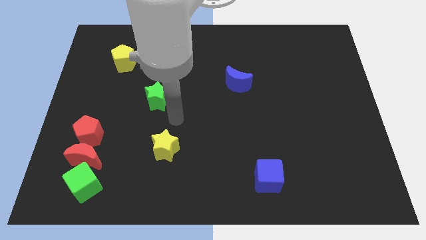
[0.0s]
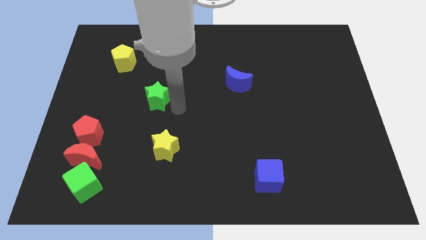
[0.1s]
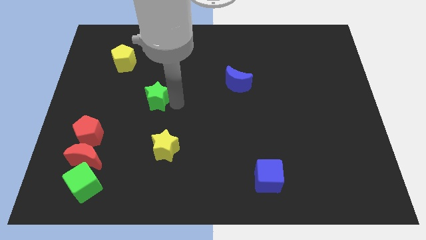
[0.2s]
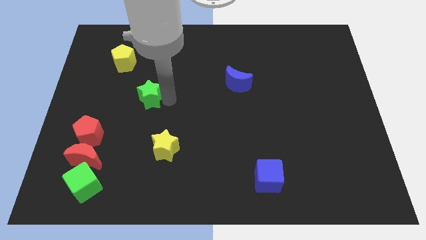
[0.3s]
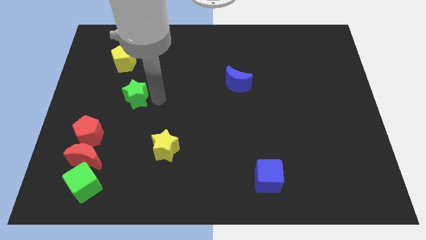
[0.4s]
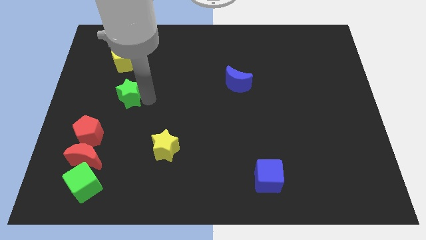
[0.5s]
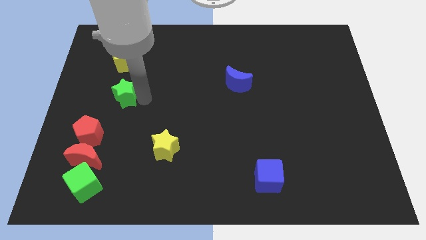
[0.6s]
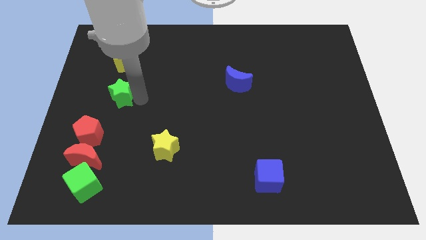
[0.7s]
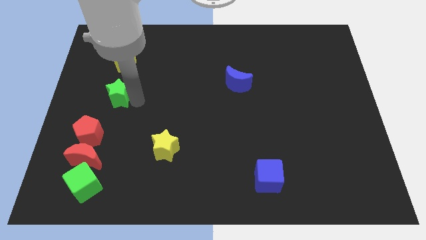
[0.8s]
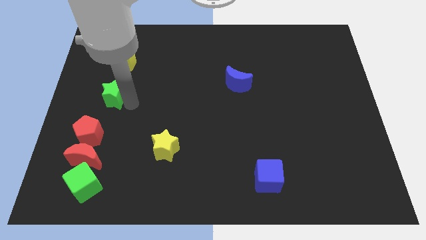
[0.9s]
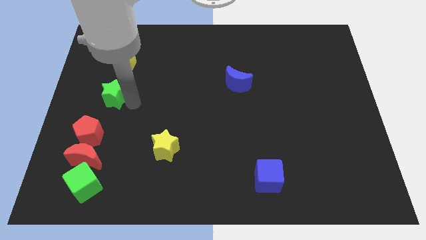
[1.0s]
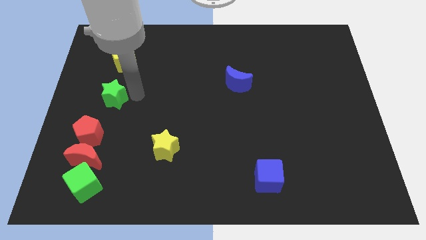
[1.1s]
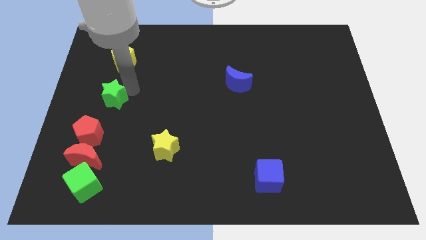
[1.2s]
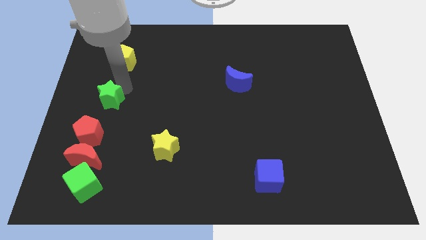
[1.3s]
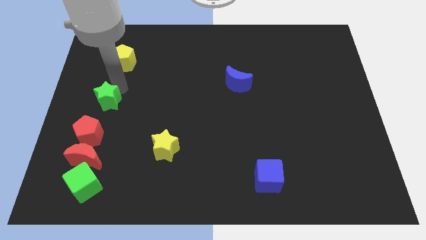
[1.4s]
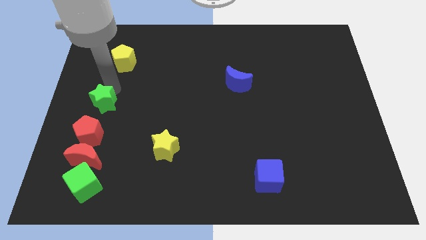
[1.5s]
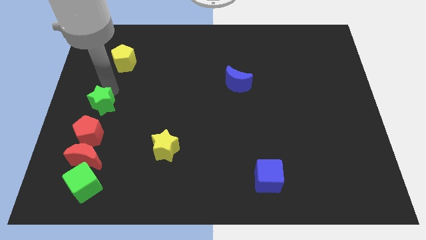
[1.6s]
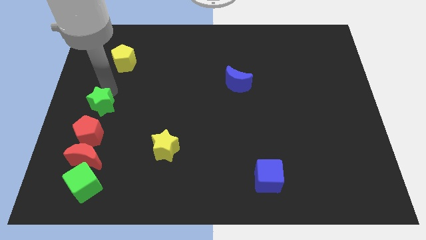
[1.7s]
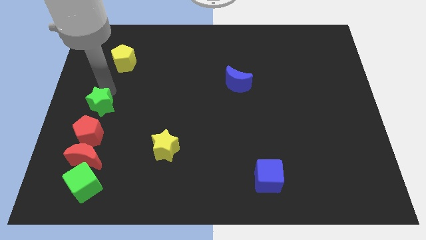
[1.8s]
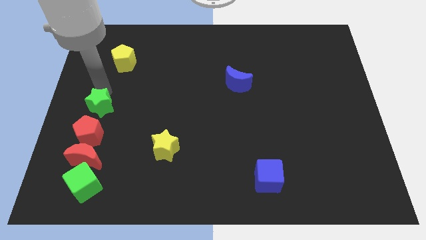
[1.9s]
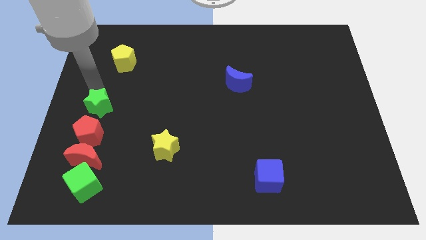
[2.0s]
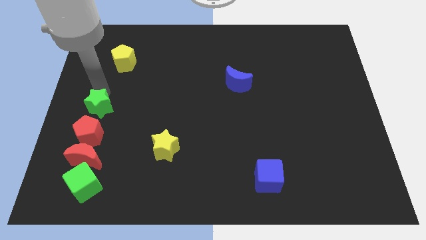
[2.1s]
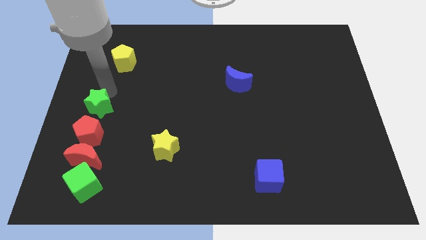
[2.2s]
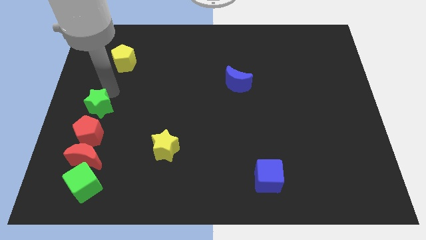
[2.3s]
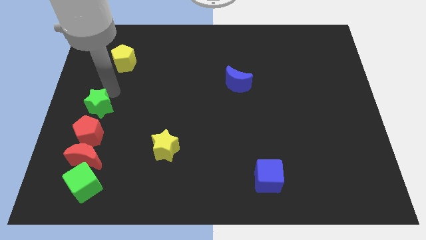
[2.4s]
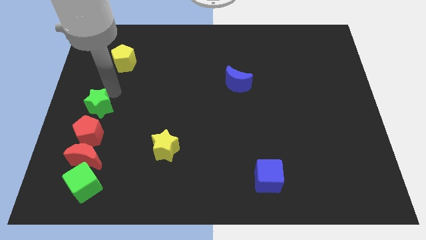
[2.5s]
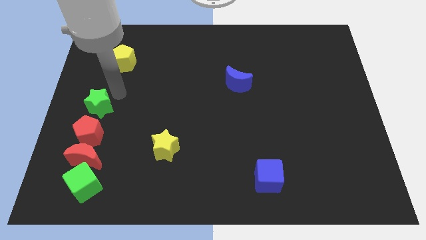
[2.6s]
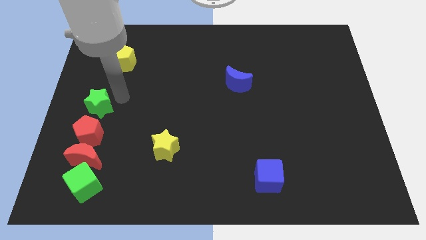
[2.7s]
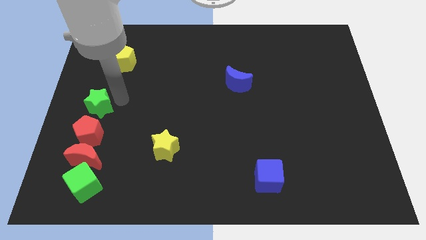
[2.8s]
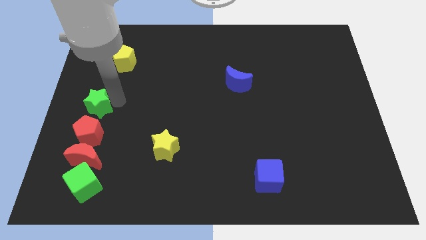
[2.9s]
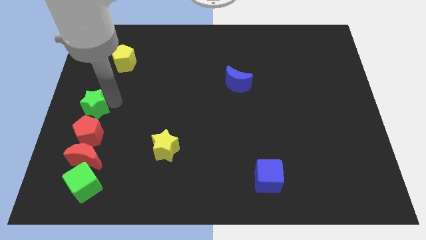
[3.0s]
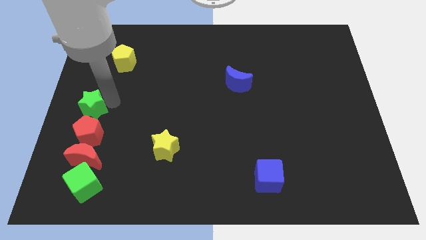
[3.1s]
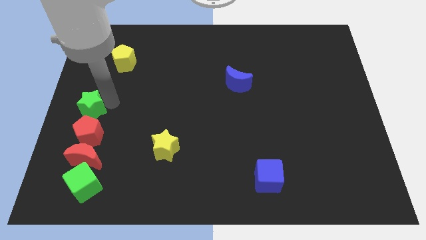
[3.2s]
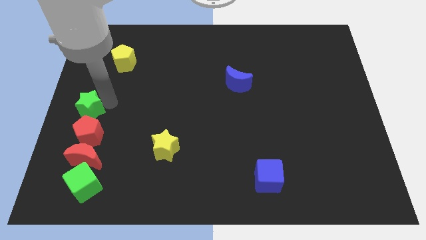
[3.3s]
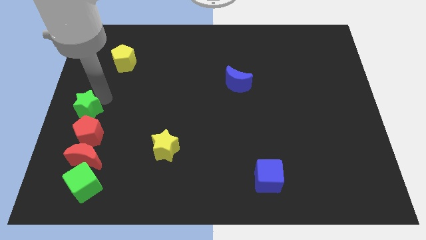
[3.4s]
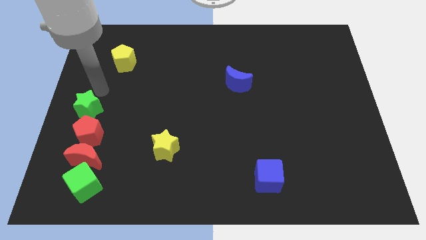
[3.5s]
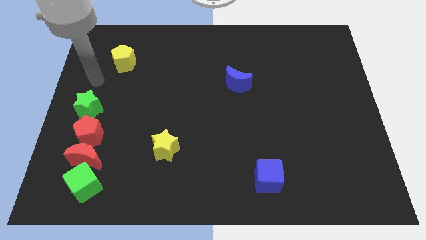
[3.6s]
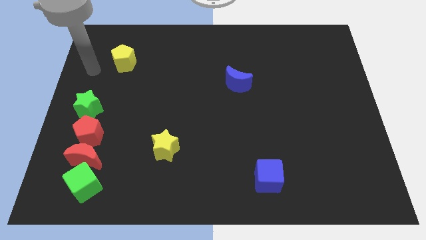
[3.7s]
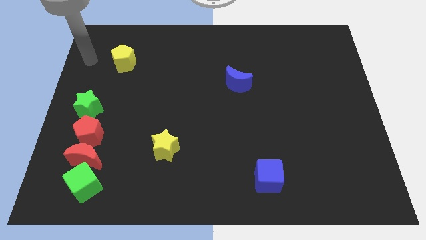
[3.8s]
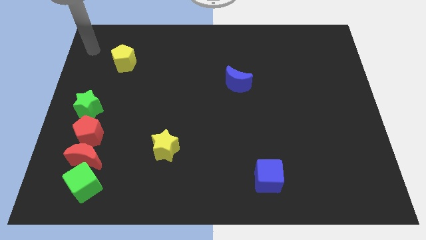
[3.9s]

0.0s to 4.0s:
place the green star below the yellow pentagon

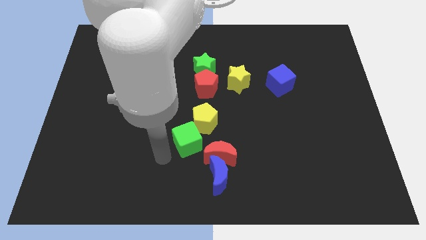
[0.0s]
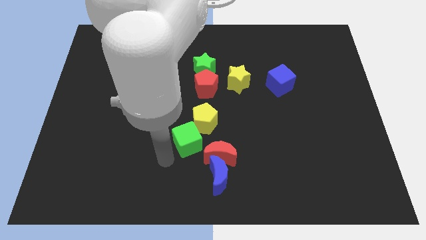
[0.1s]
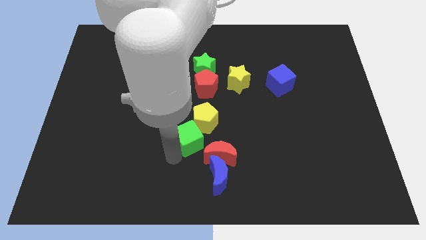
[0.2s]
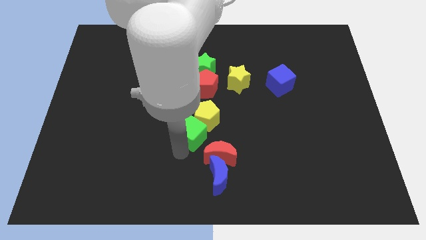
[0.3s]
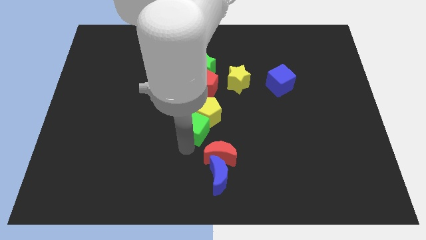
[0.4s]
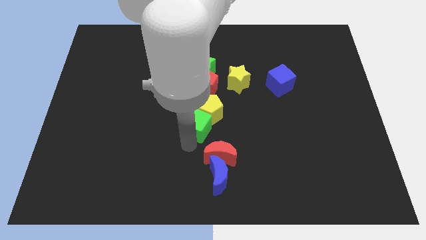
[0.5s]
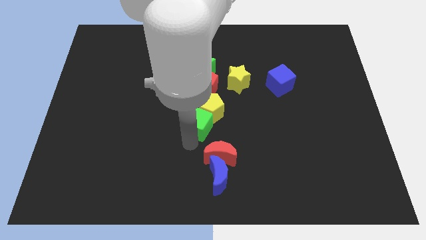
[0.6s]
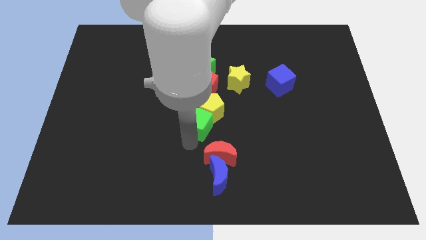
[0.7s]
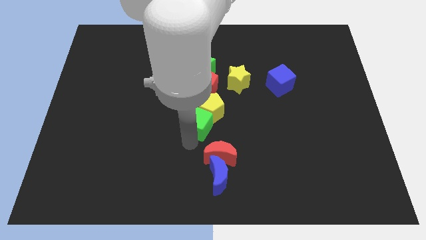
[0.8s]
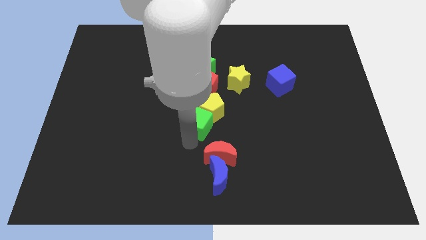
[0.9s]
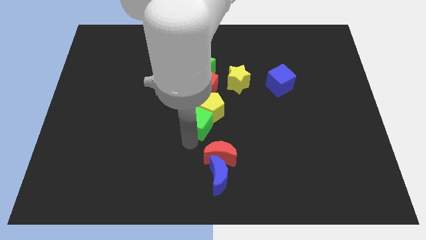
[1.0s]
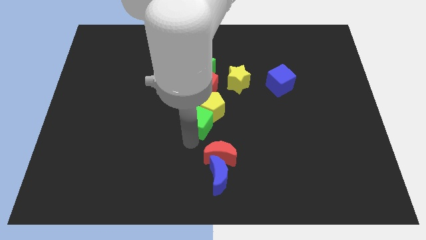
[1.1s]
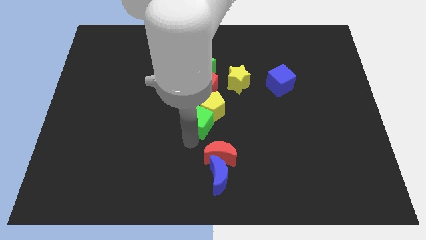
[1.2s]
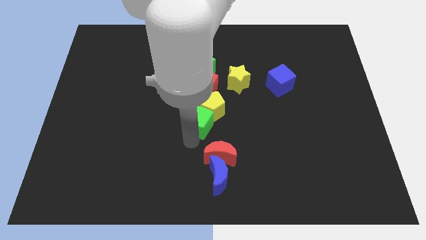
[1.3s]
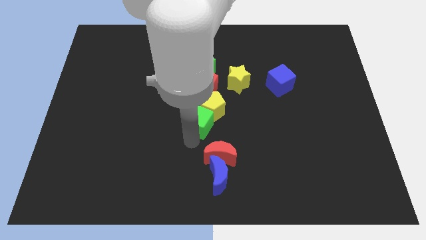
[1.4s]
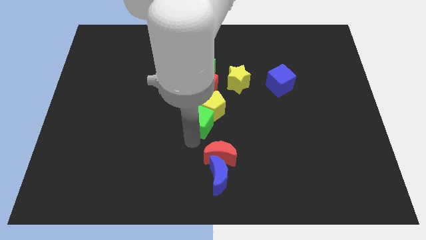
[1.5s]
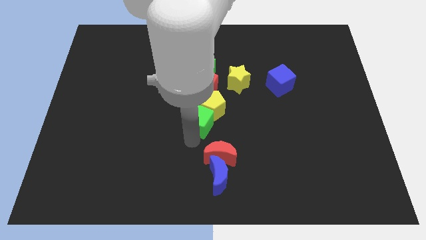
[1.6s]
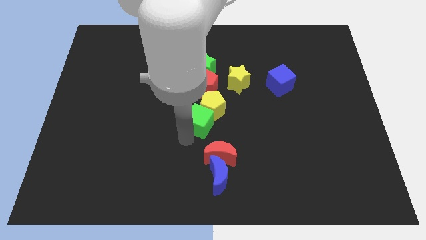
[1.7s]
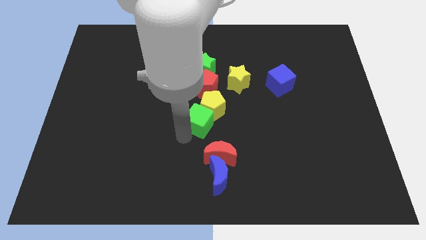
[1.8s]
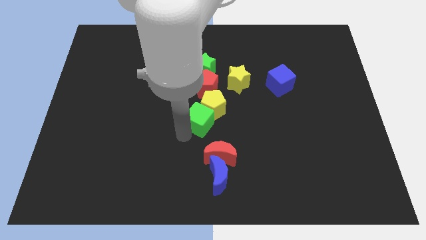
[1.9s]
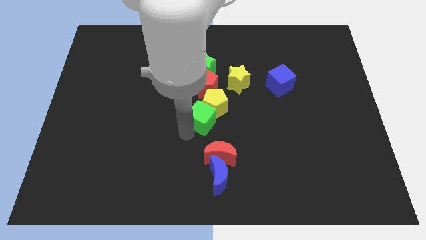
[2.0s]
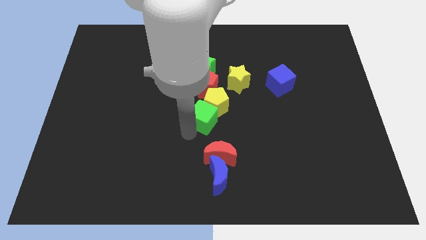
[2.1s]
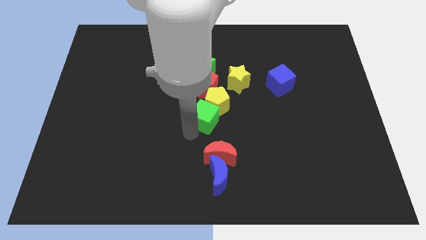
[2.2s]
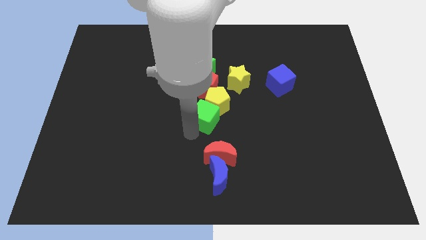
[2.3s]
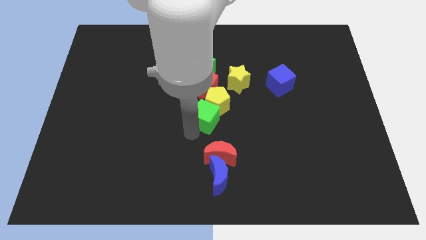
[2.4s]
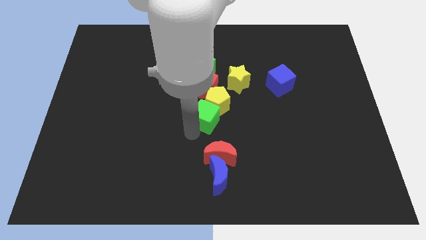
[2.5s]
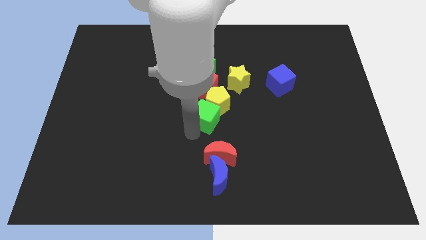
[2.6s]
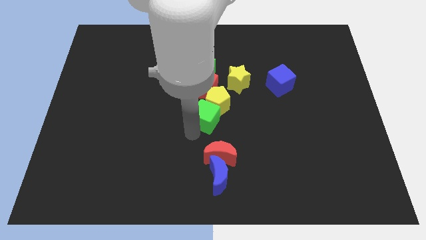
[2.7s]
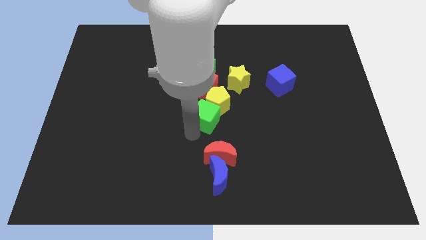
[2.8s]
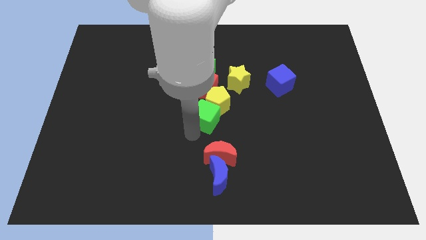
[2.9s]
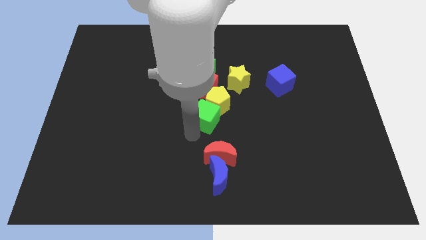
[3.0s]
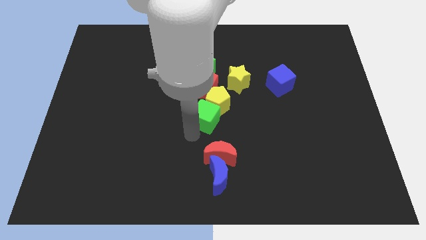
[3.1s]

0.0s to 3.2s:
move the green cube and yellow pentagon to the center

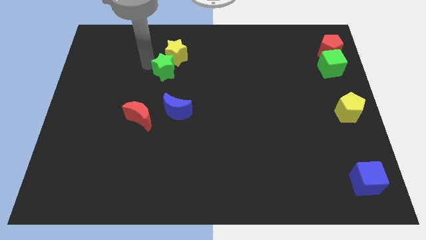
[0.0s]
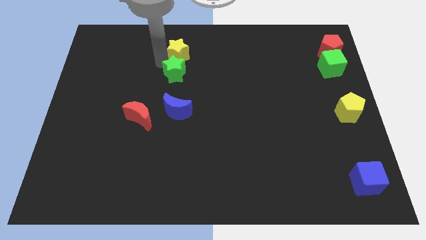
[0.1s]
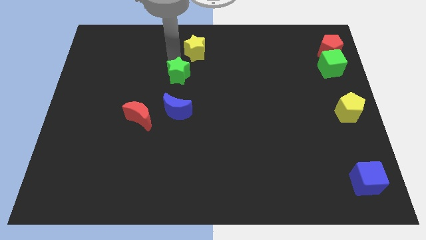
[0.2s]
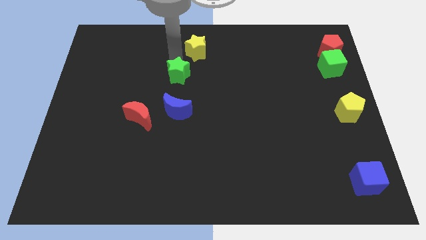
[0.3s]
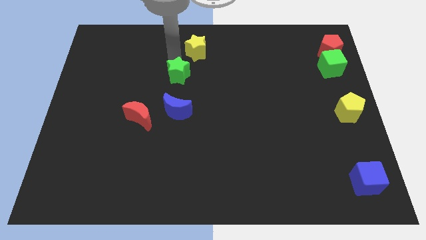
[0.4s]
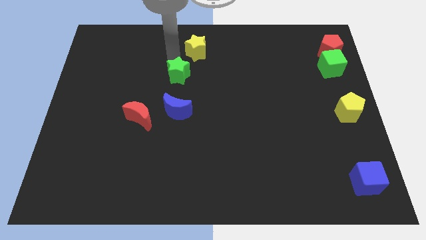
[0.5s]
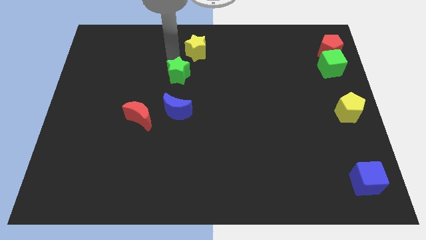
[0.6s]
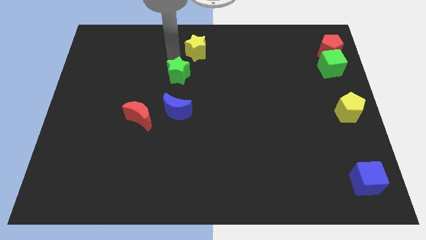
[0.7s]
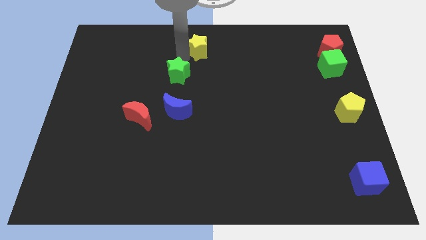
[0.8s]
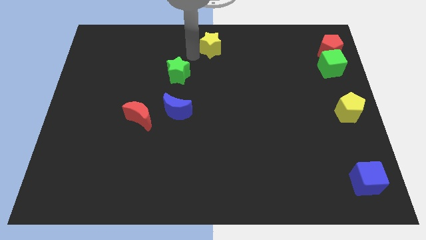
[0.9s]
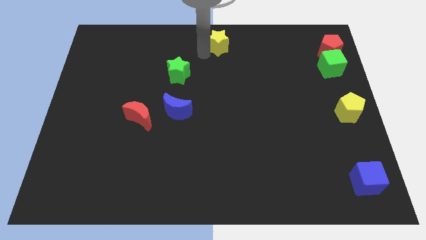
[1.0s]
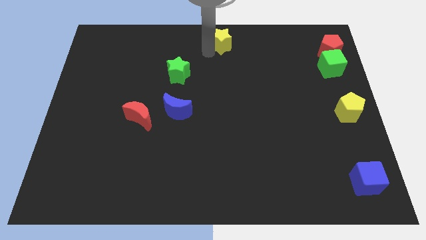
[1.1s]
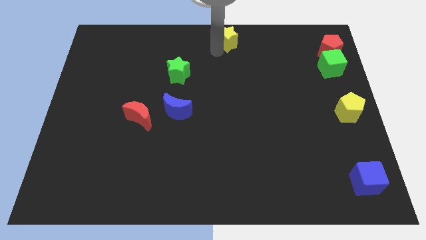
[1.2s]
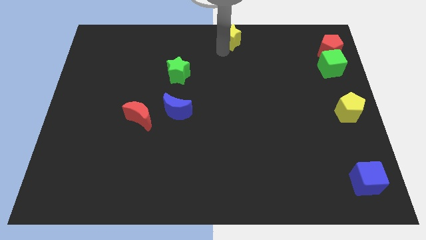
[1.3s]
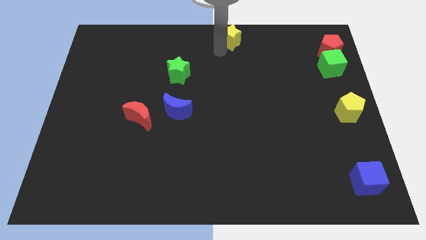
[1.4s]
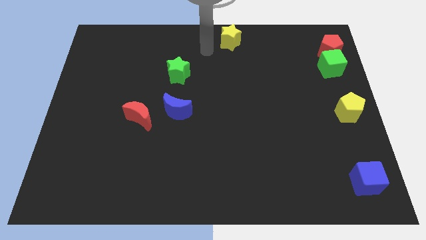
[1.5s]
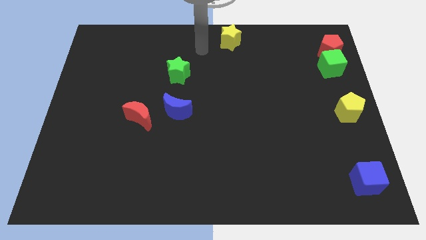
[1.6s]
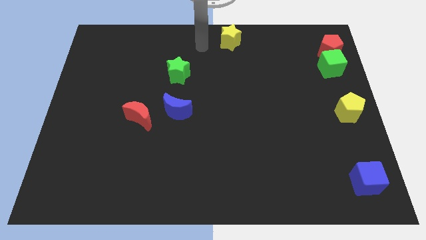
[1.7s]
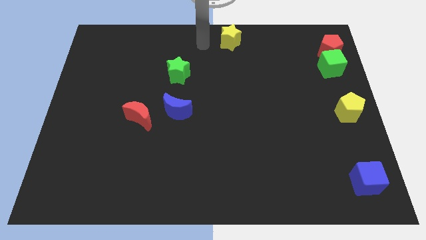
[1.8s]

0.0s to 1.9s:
separate yellow star from the green star

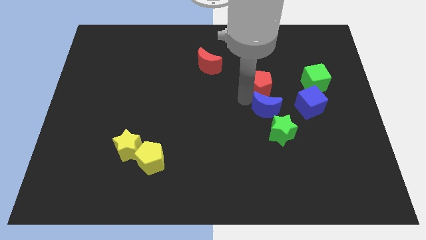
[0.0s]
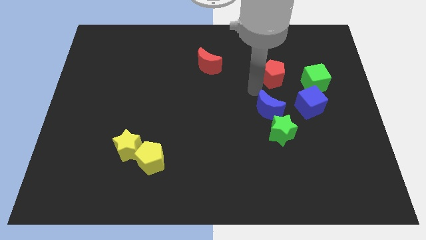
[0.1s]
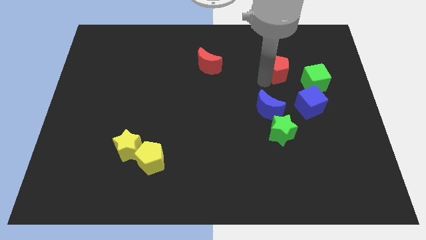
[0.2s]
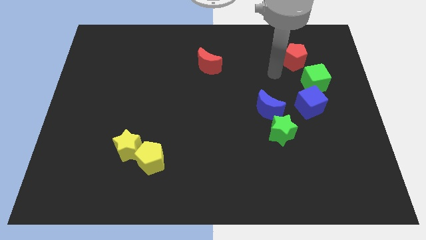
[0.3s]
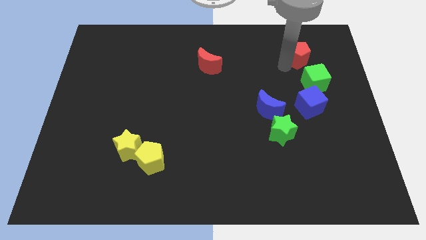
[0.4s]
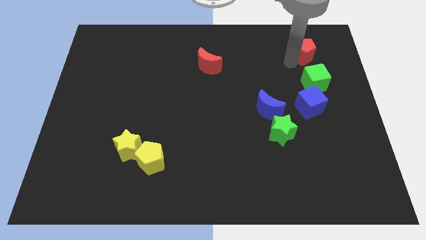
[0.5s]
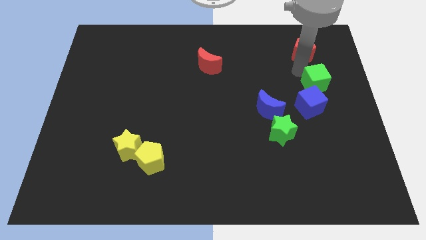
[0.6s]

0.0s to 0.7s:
place the red pentagon above the green cube
